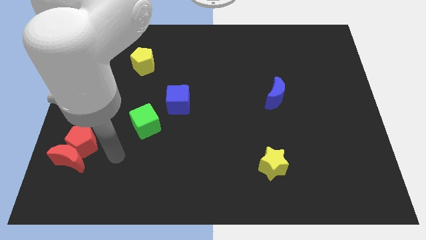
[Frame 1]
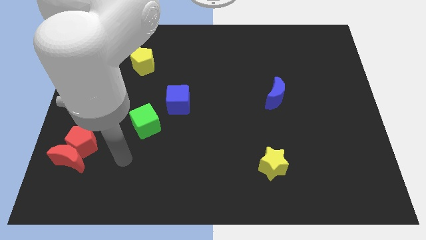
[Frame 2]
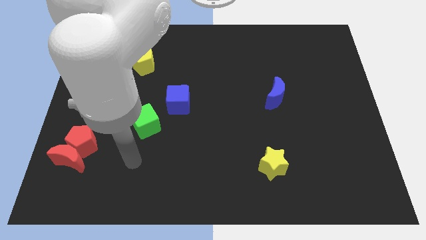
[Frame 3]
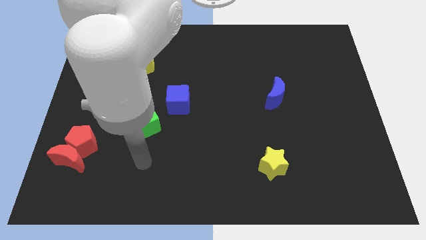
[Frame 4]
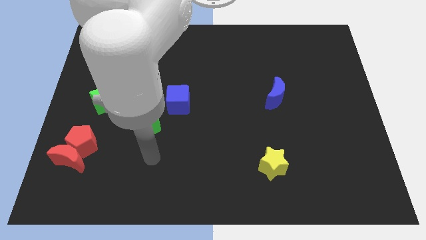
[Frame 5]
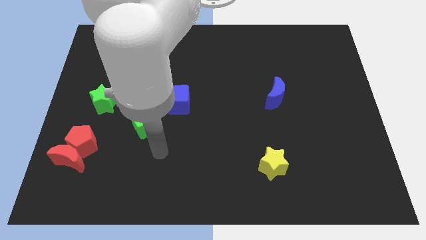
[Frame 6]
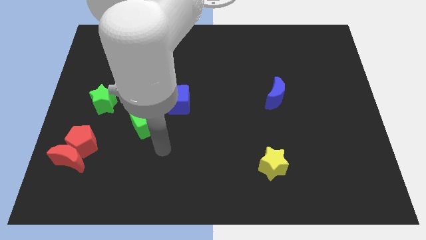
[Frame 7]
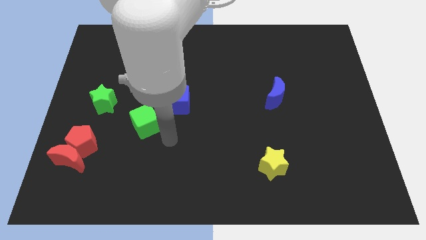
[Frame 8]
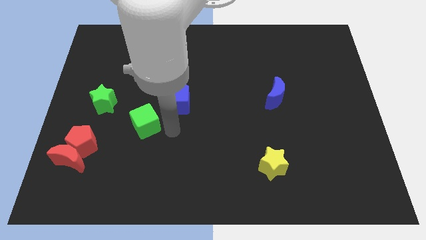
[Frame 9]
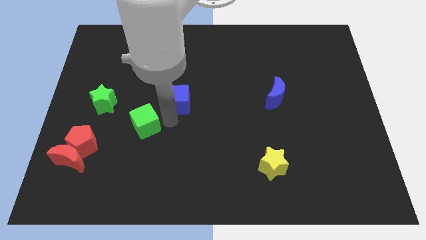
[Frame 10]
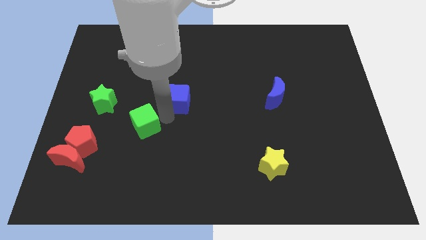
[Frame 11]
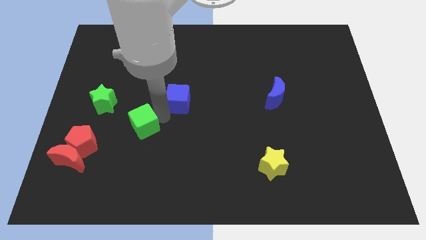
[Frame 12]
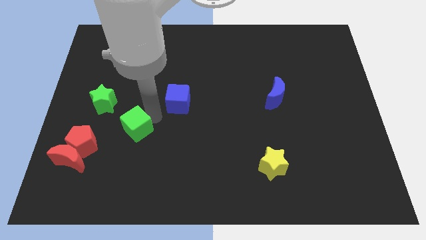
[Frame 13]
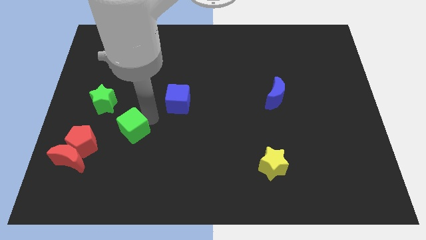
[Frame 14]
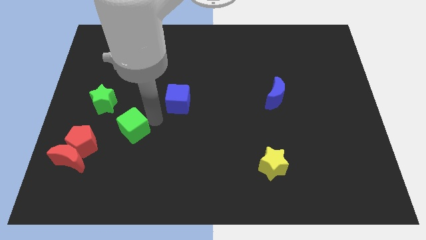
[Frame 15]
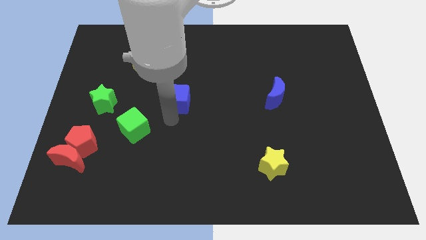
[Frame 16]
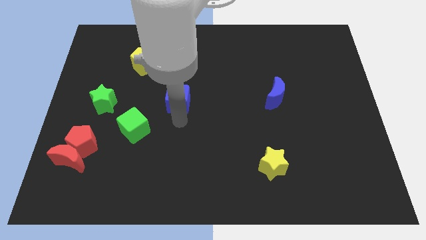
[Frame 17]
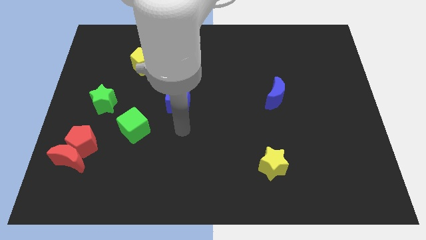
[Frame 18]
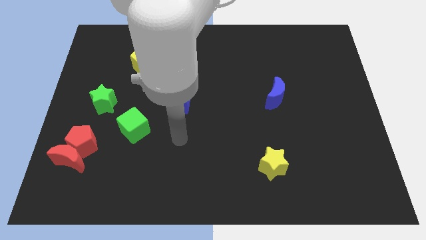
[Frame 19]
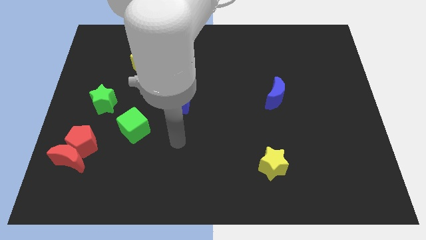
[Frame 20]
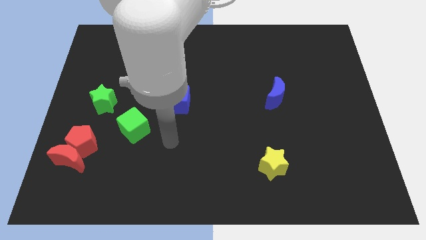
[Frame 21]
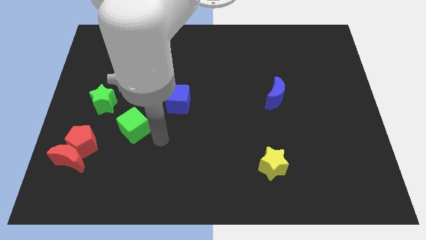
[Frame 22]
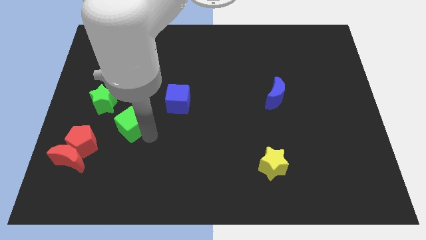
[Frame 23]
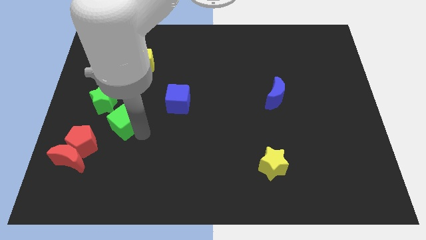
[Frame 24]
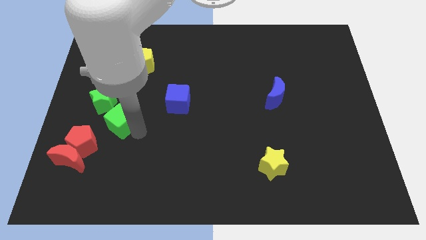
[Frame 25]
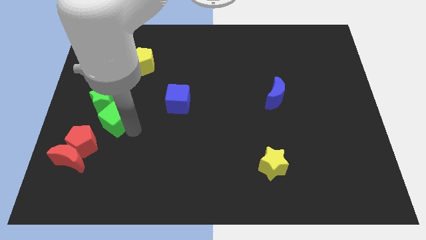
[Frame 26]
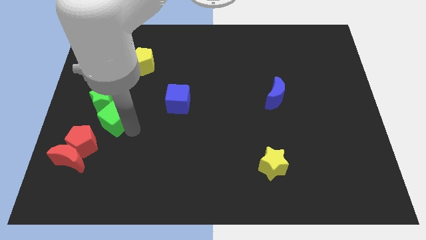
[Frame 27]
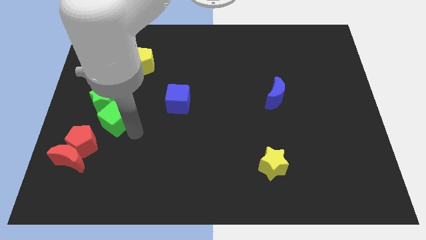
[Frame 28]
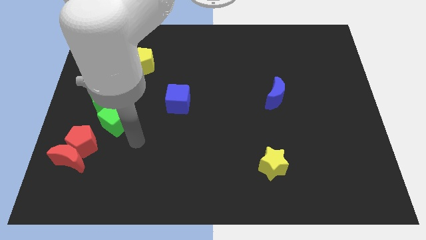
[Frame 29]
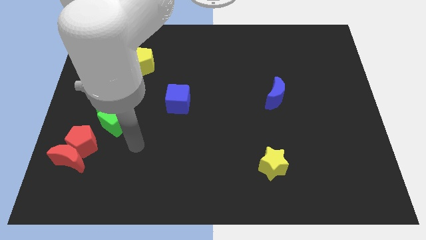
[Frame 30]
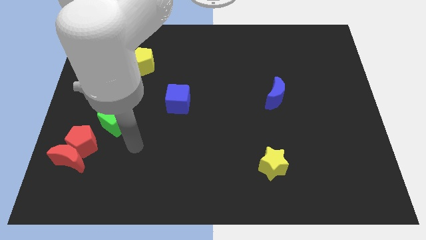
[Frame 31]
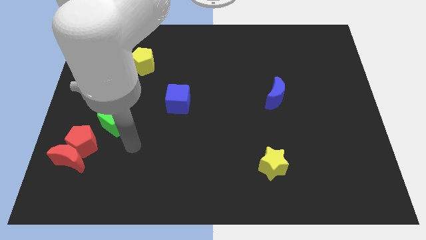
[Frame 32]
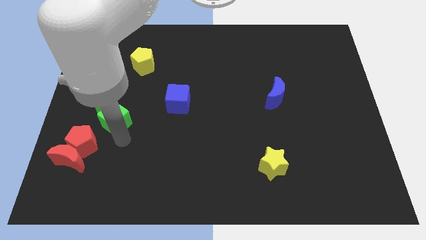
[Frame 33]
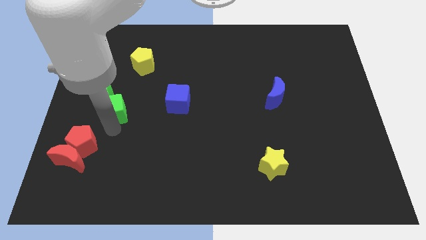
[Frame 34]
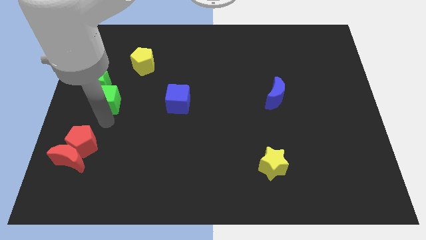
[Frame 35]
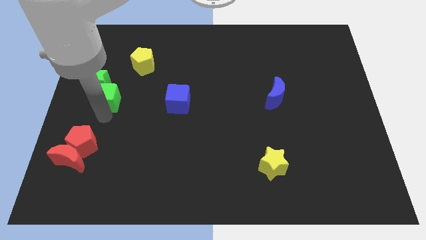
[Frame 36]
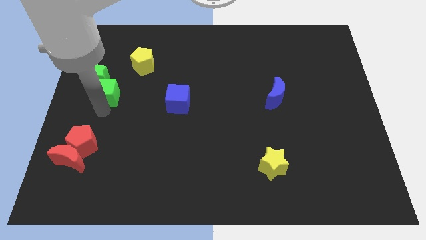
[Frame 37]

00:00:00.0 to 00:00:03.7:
push the green cube below the green star

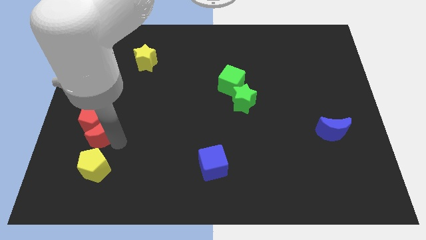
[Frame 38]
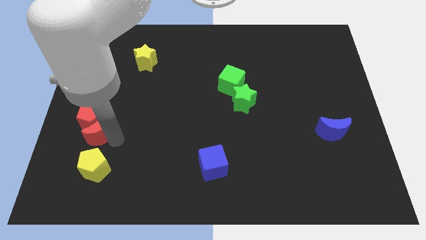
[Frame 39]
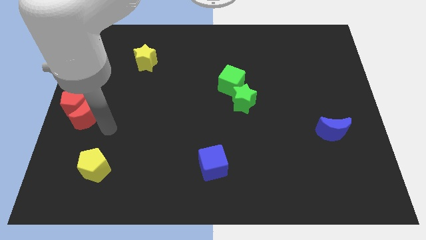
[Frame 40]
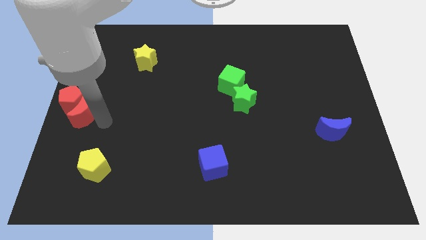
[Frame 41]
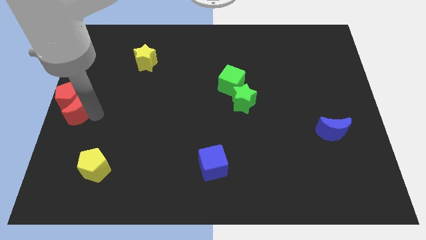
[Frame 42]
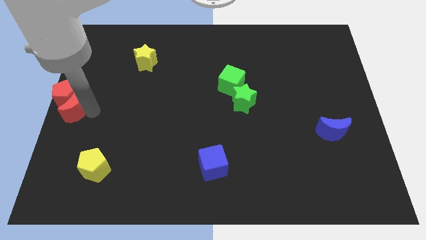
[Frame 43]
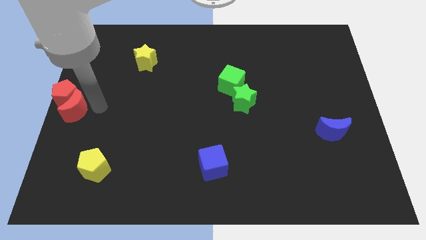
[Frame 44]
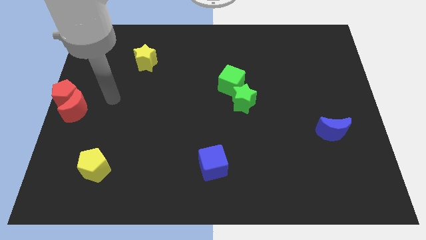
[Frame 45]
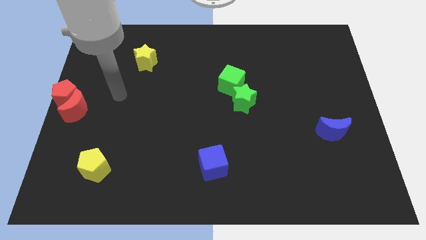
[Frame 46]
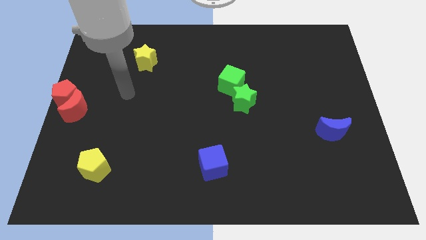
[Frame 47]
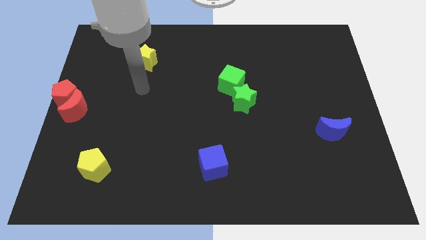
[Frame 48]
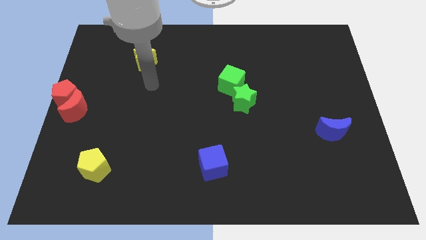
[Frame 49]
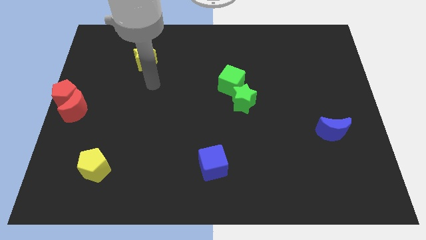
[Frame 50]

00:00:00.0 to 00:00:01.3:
move the red blocks to the left center of the board

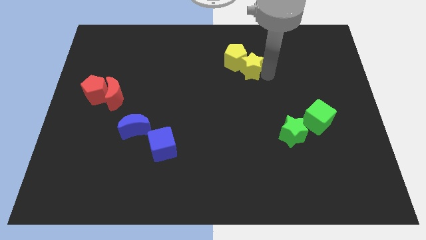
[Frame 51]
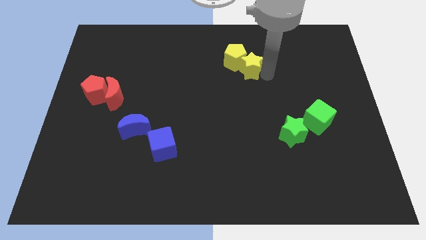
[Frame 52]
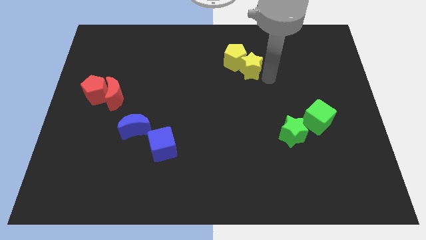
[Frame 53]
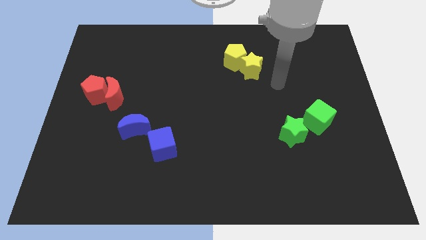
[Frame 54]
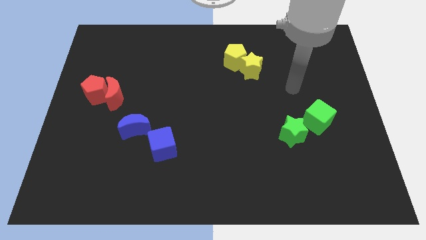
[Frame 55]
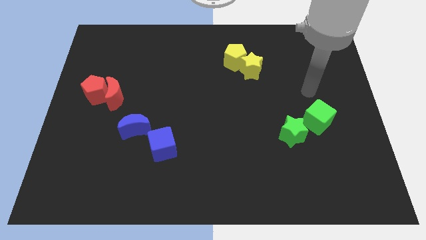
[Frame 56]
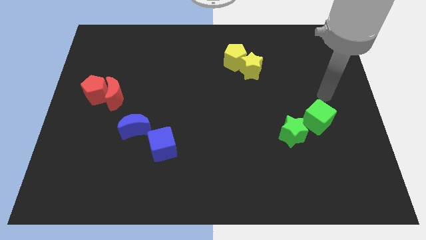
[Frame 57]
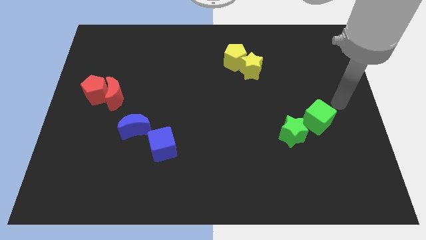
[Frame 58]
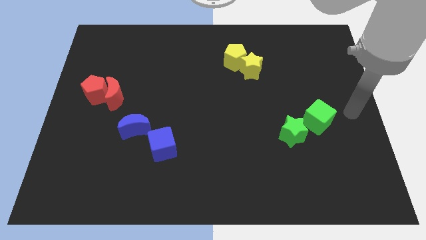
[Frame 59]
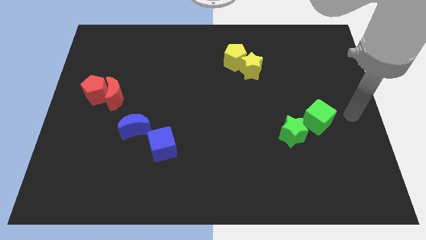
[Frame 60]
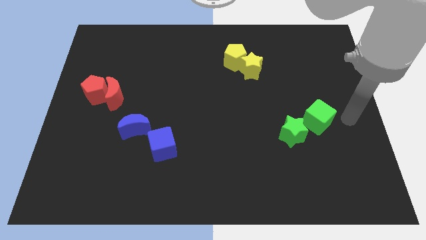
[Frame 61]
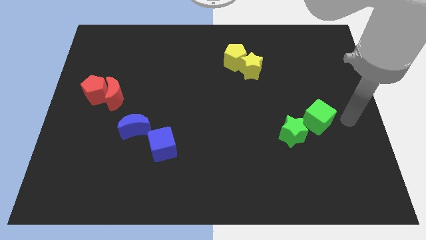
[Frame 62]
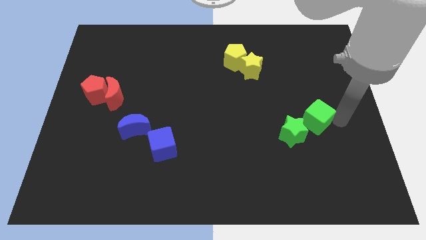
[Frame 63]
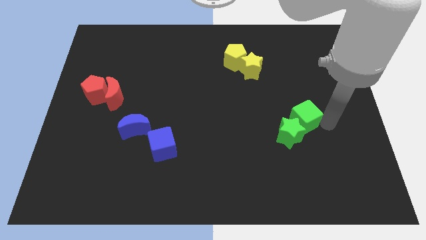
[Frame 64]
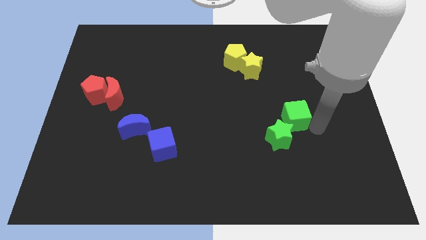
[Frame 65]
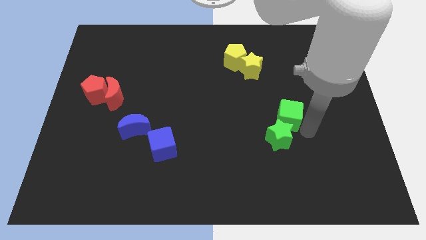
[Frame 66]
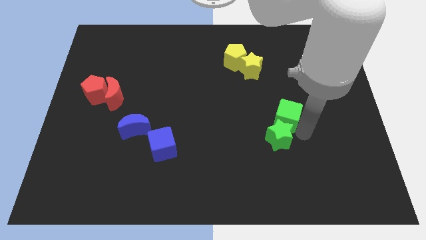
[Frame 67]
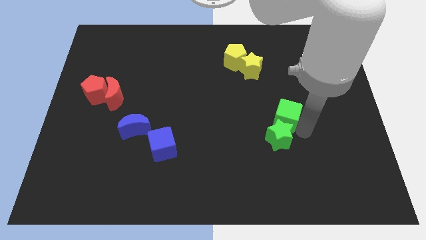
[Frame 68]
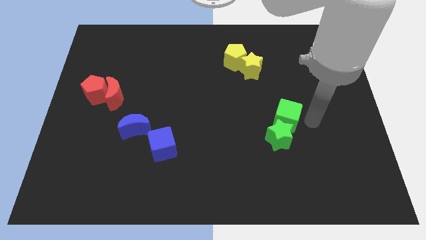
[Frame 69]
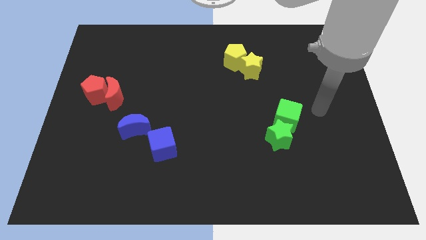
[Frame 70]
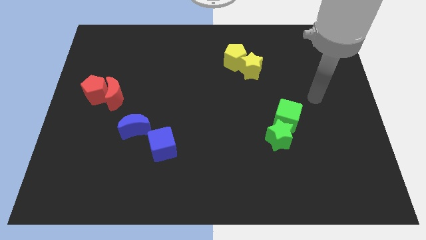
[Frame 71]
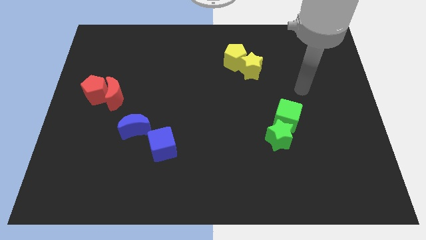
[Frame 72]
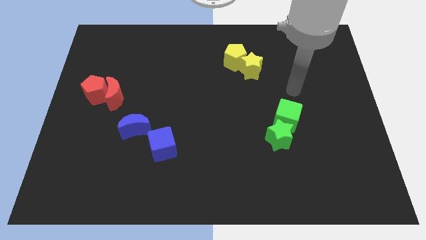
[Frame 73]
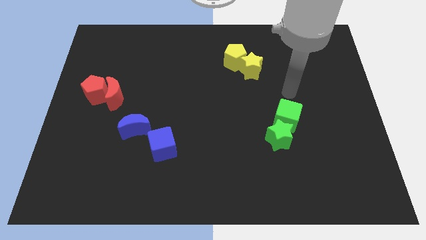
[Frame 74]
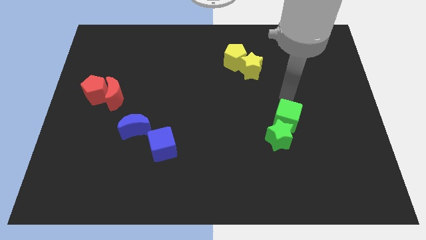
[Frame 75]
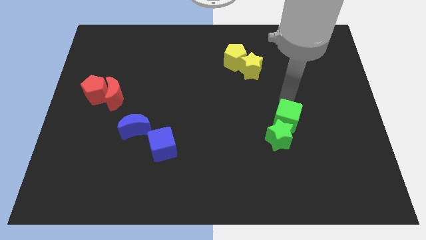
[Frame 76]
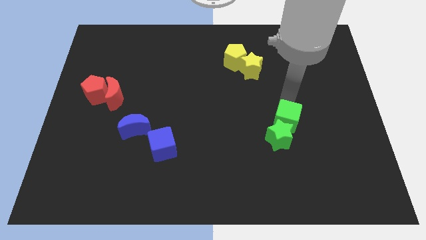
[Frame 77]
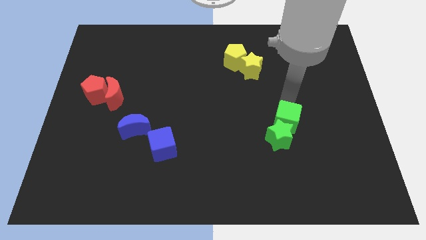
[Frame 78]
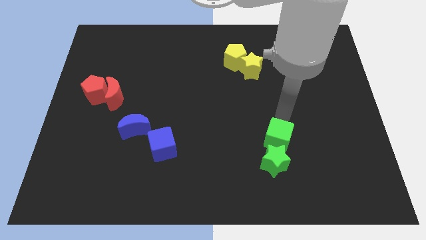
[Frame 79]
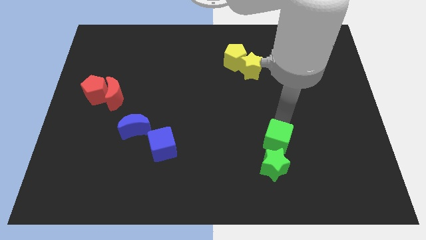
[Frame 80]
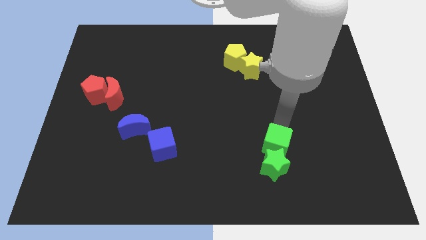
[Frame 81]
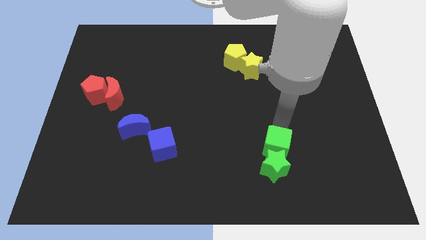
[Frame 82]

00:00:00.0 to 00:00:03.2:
push the green cube along with the green star towards the bottom of the board

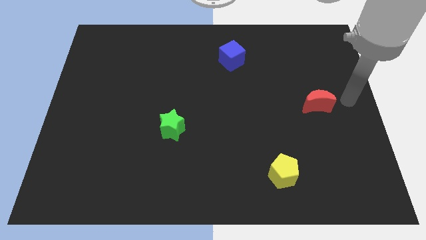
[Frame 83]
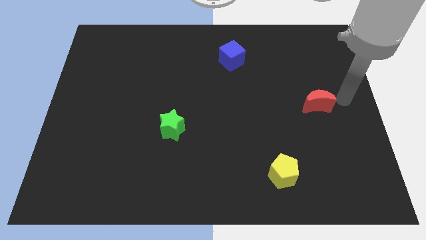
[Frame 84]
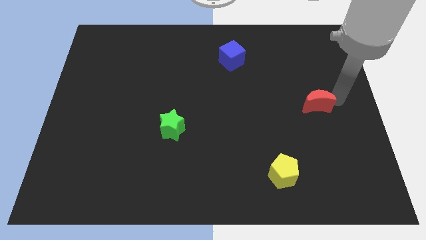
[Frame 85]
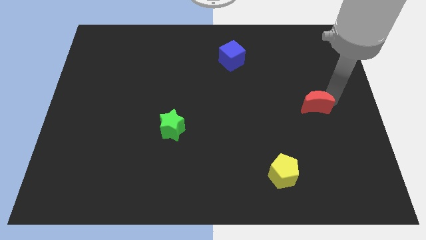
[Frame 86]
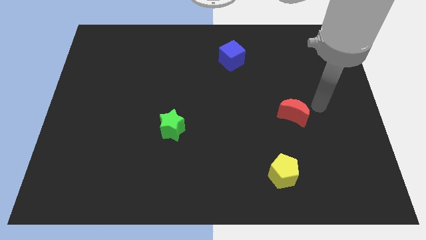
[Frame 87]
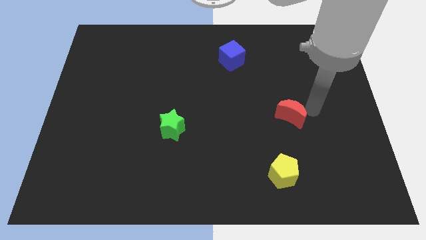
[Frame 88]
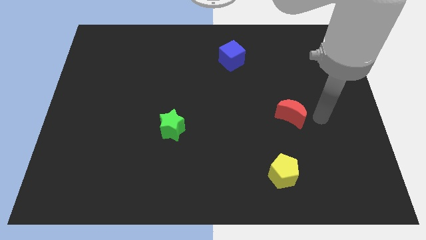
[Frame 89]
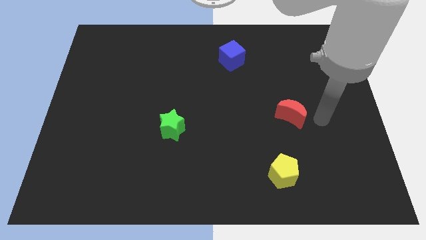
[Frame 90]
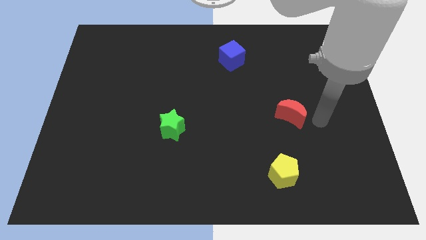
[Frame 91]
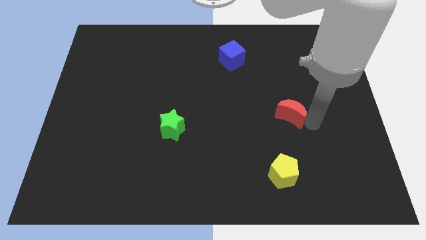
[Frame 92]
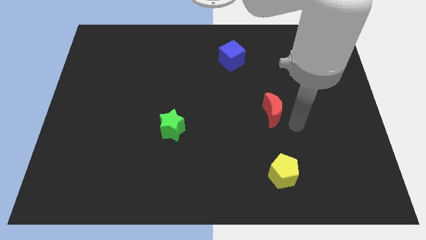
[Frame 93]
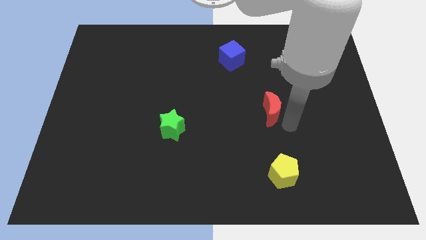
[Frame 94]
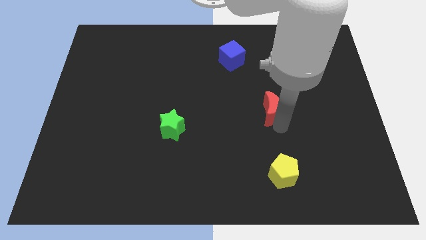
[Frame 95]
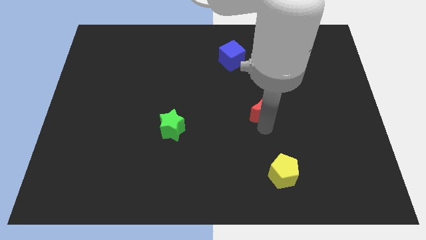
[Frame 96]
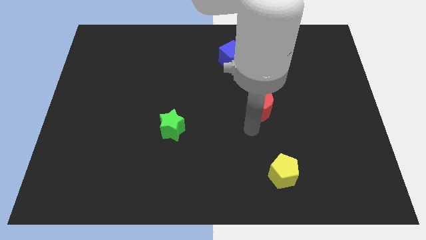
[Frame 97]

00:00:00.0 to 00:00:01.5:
place the red block in between the blue and yellow blocks
